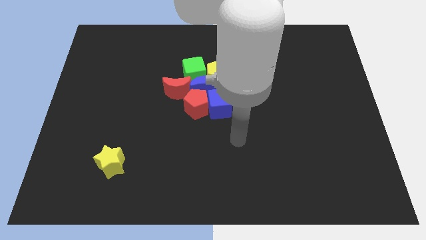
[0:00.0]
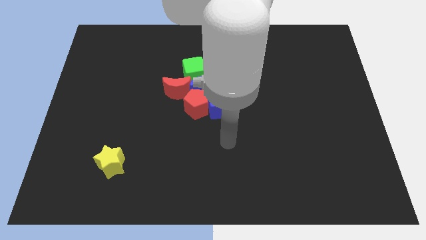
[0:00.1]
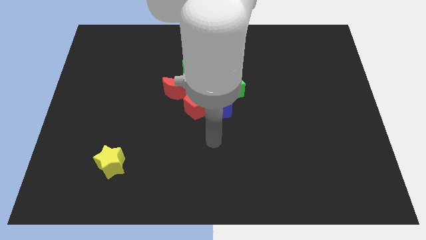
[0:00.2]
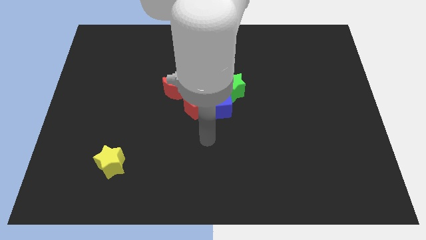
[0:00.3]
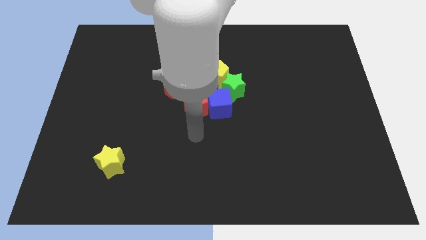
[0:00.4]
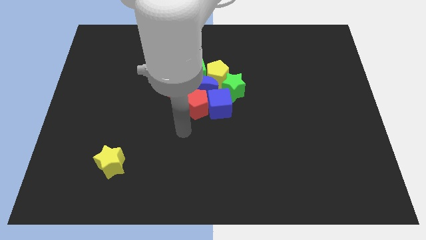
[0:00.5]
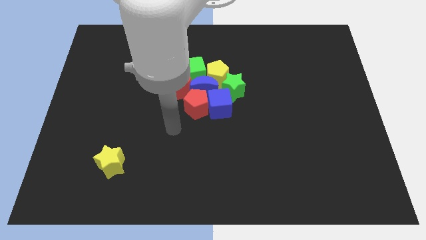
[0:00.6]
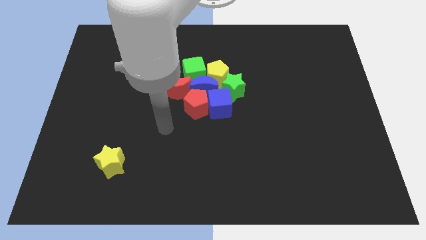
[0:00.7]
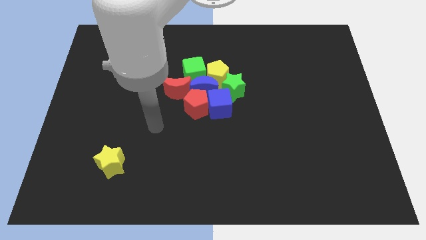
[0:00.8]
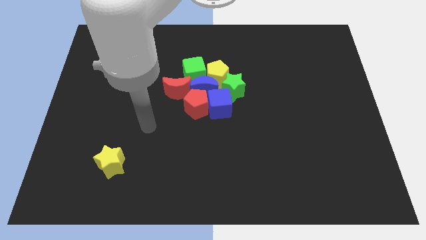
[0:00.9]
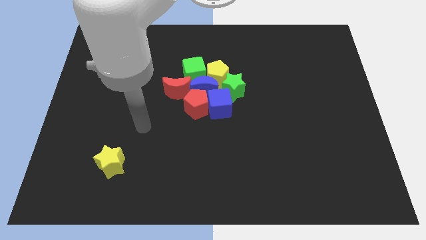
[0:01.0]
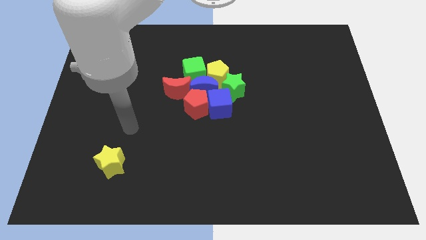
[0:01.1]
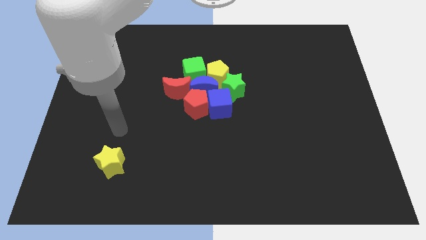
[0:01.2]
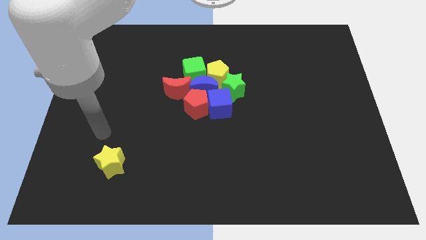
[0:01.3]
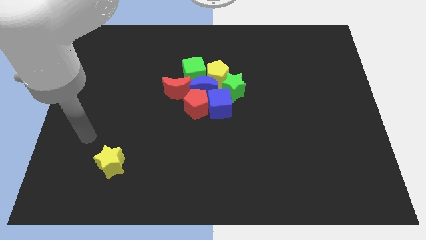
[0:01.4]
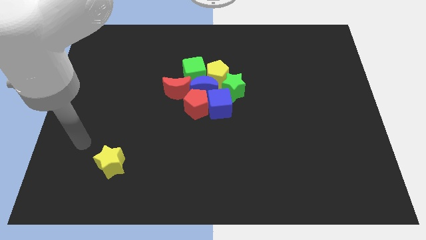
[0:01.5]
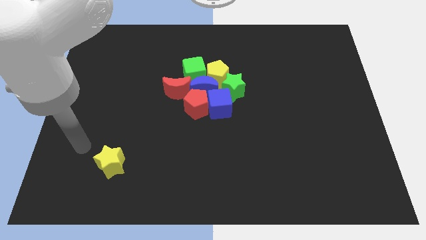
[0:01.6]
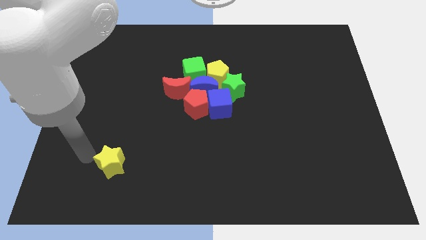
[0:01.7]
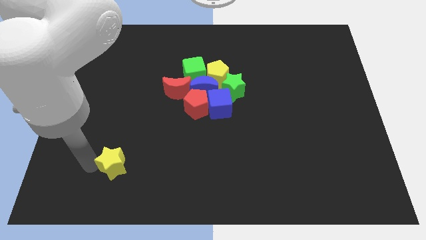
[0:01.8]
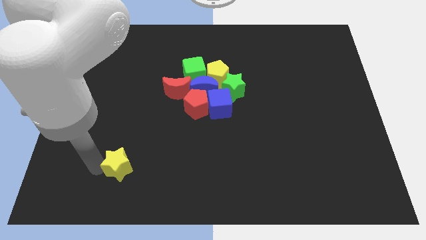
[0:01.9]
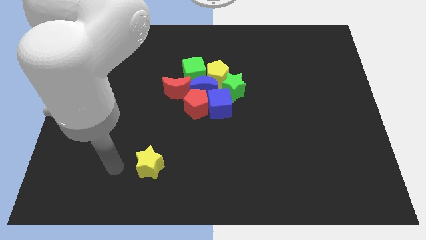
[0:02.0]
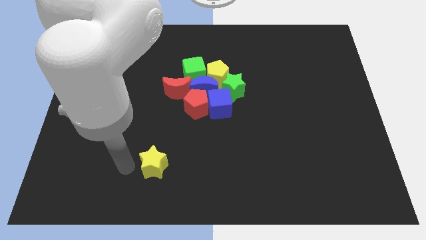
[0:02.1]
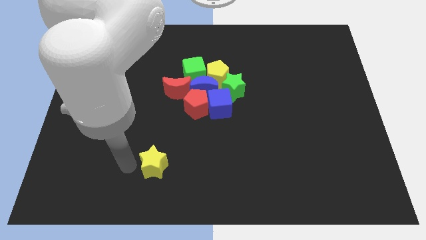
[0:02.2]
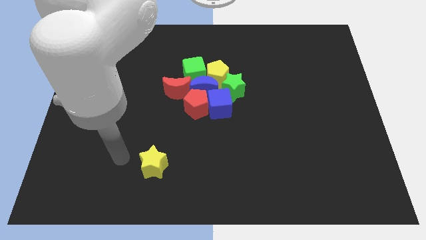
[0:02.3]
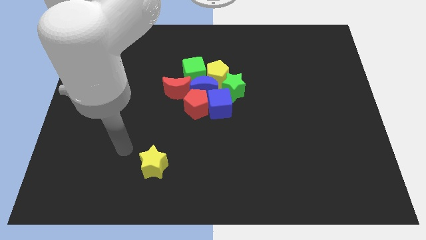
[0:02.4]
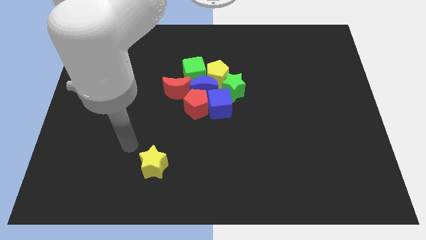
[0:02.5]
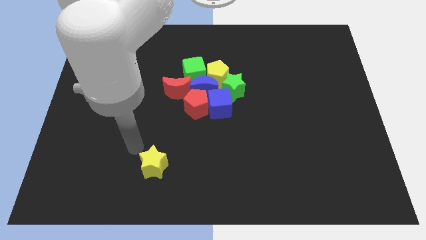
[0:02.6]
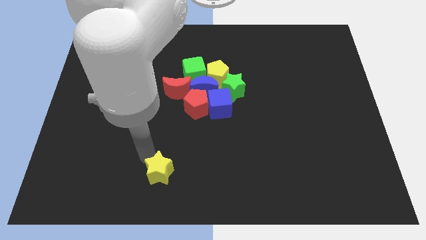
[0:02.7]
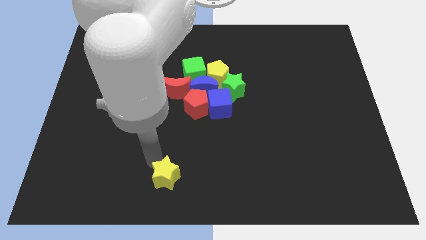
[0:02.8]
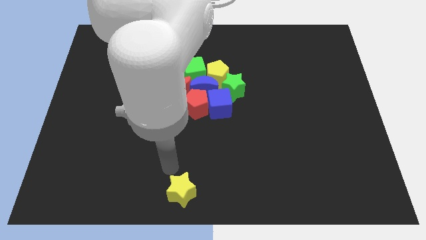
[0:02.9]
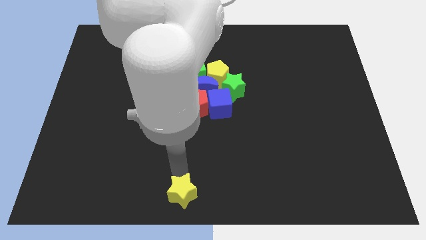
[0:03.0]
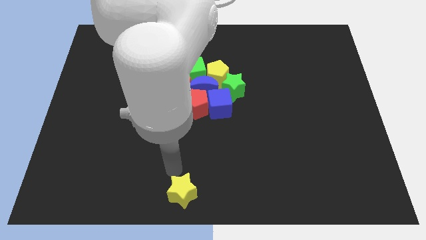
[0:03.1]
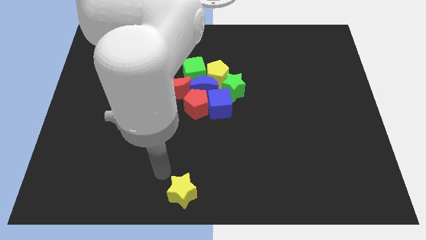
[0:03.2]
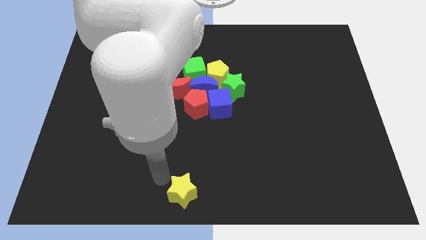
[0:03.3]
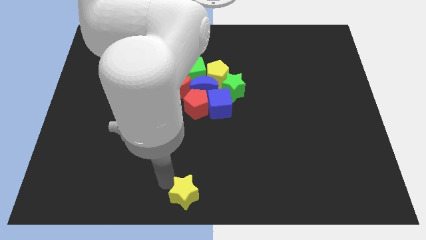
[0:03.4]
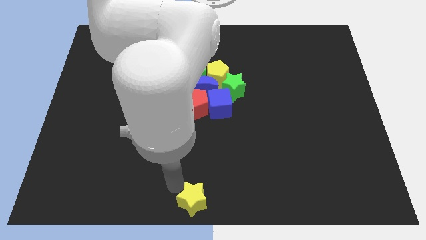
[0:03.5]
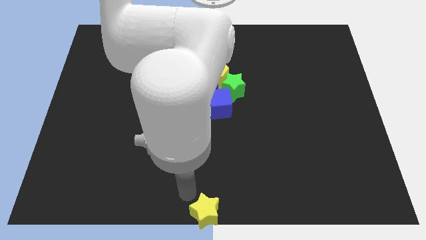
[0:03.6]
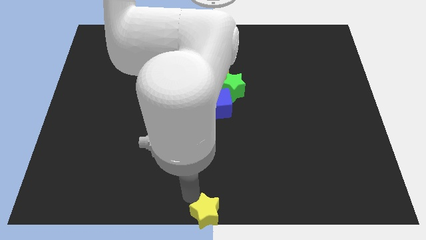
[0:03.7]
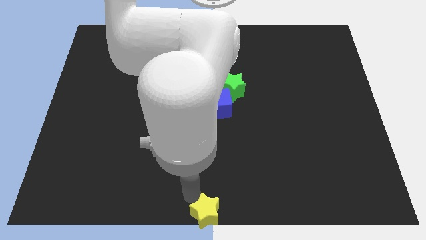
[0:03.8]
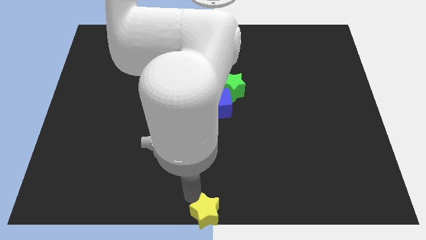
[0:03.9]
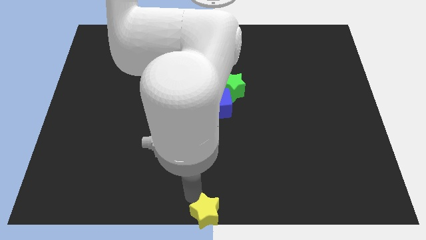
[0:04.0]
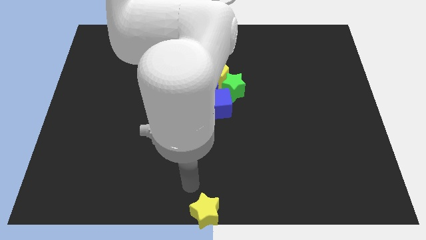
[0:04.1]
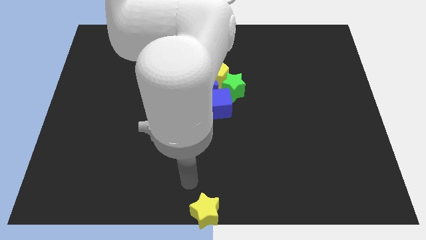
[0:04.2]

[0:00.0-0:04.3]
place the yellow star at the bottom center of the board

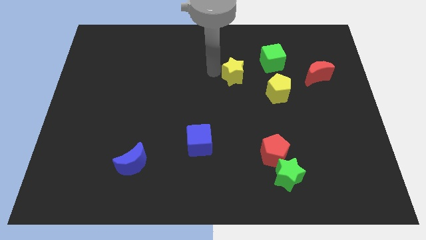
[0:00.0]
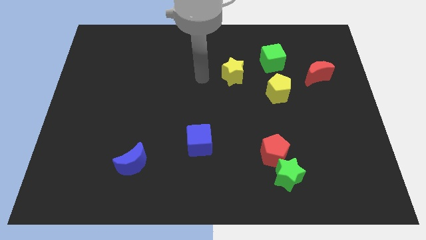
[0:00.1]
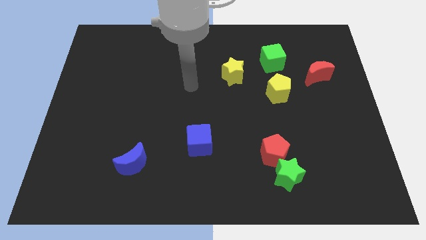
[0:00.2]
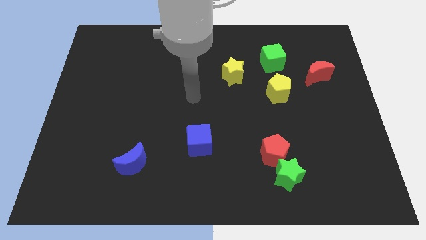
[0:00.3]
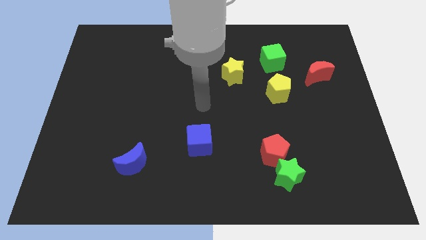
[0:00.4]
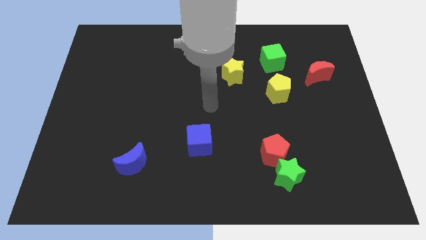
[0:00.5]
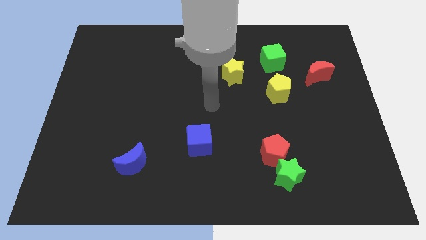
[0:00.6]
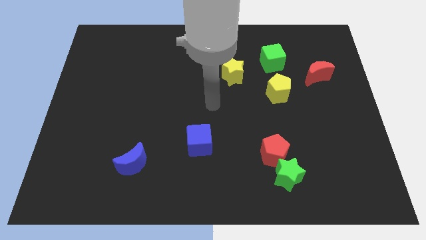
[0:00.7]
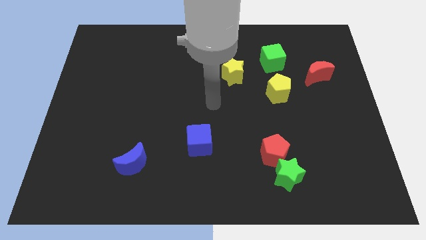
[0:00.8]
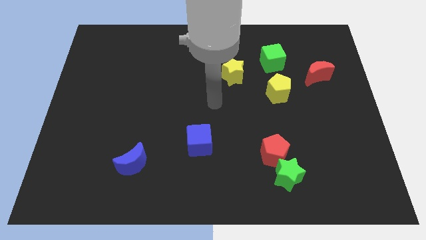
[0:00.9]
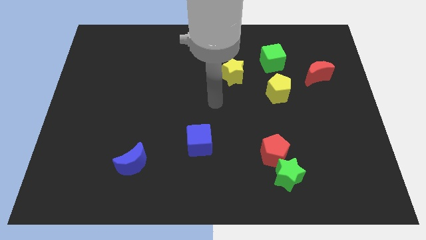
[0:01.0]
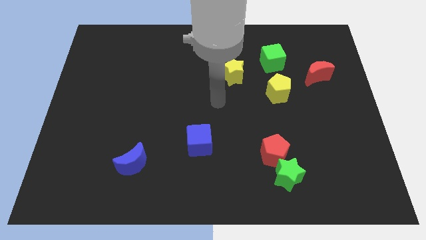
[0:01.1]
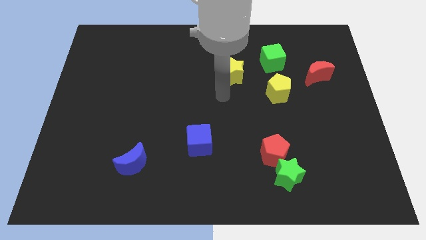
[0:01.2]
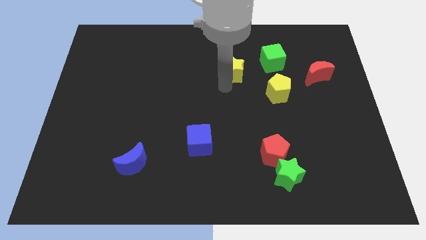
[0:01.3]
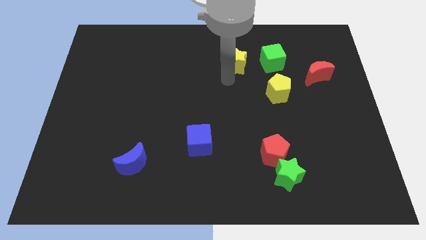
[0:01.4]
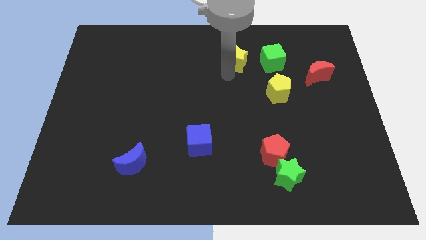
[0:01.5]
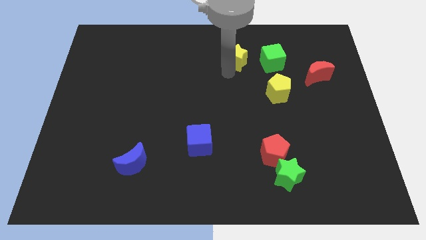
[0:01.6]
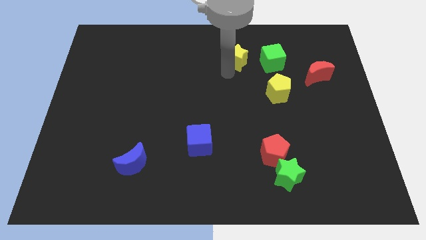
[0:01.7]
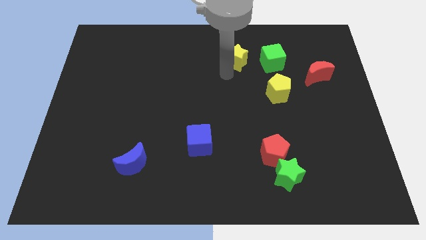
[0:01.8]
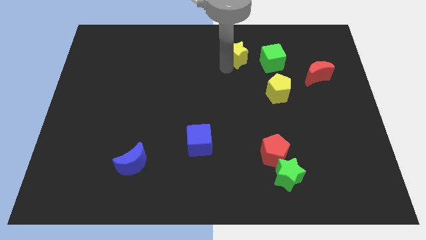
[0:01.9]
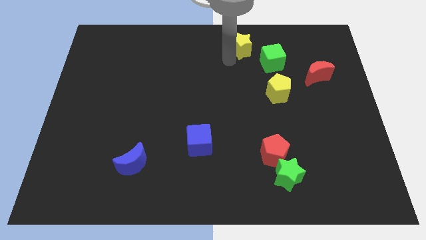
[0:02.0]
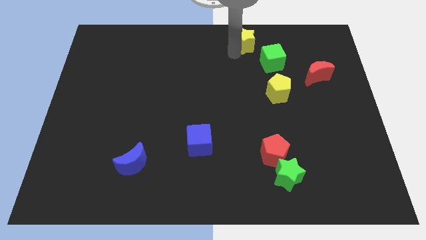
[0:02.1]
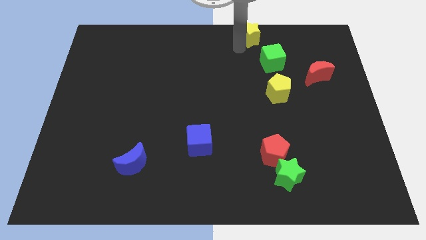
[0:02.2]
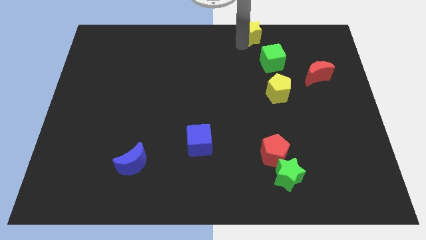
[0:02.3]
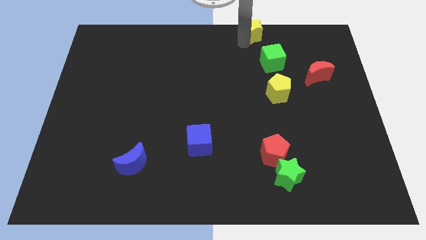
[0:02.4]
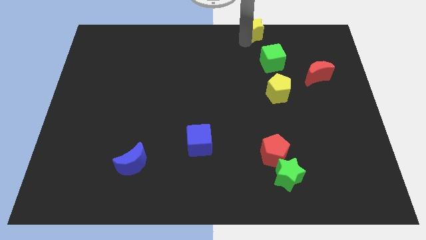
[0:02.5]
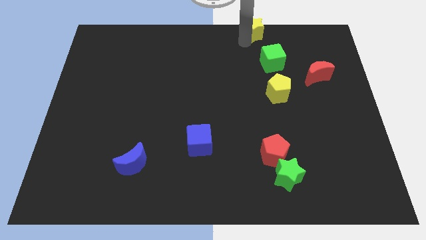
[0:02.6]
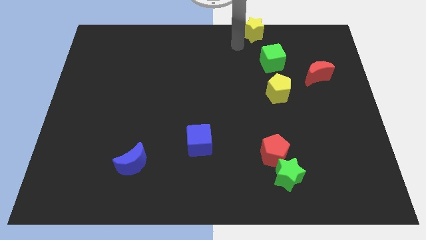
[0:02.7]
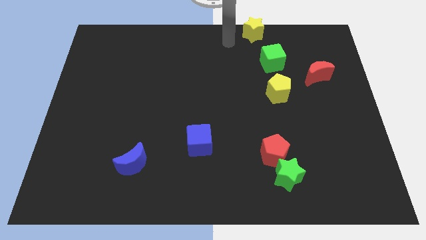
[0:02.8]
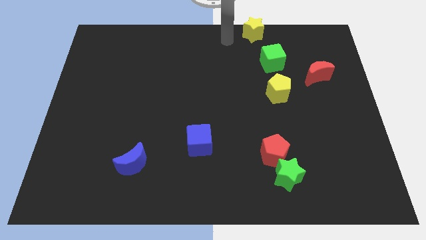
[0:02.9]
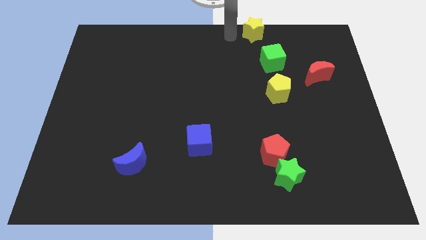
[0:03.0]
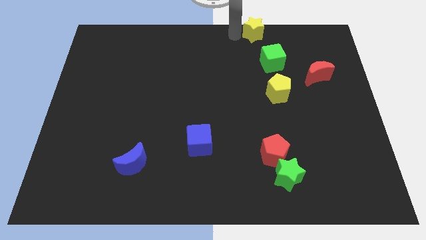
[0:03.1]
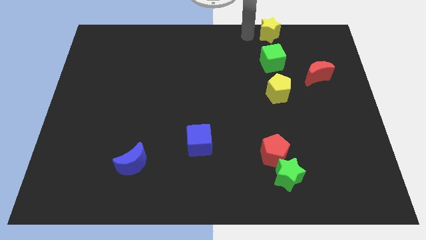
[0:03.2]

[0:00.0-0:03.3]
move the yellow star above the green cube

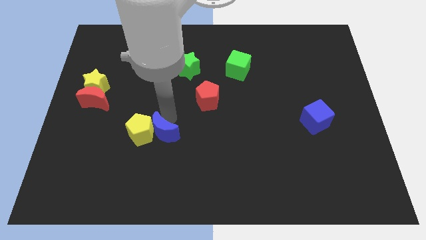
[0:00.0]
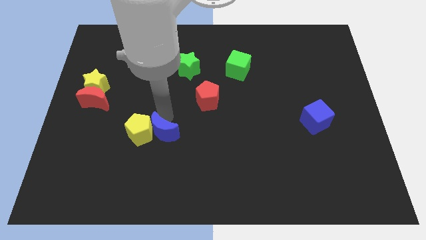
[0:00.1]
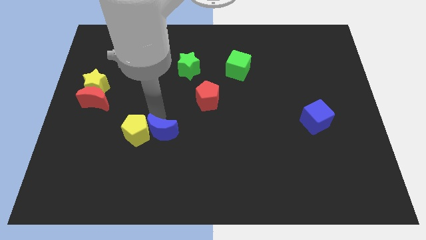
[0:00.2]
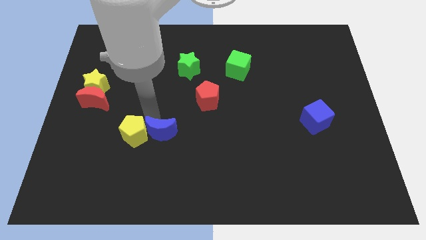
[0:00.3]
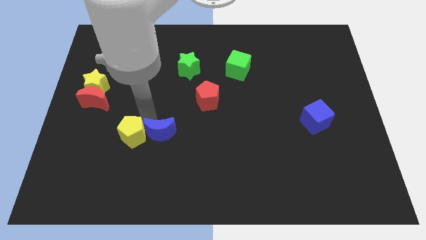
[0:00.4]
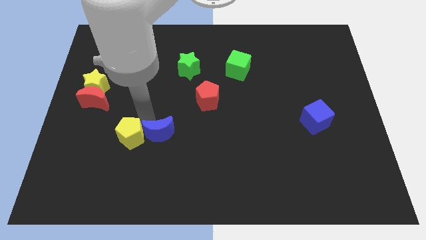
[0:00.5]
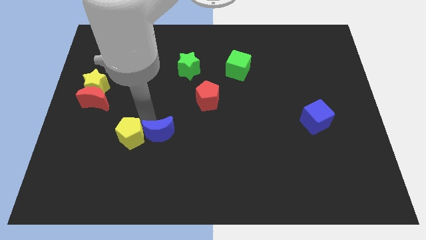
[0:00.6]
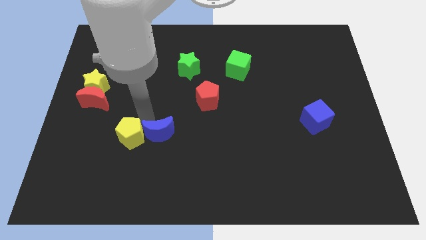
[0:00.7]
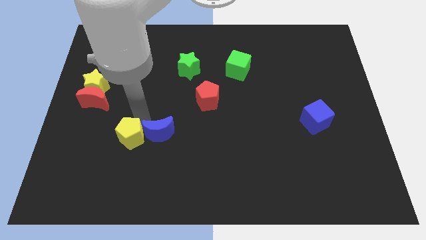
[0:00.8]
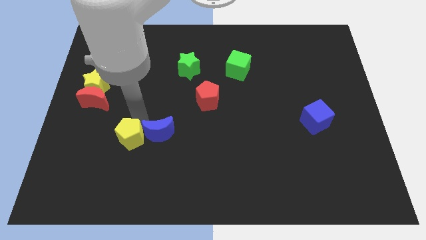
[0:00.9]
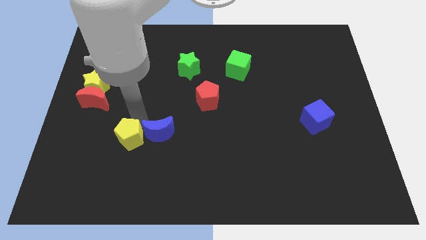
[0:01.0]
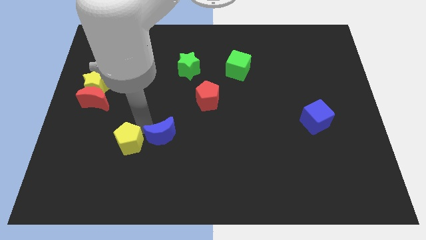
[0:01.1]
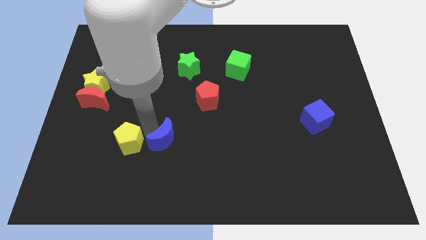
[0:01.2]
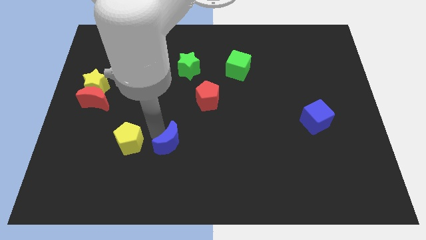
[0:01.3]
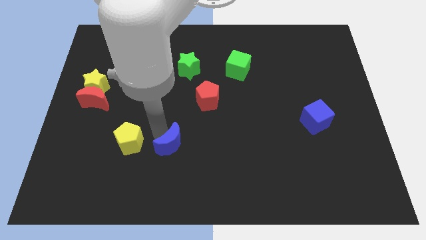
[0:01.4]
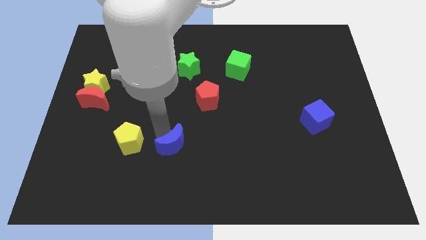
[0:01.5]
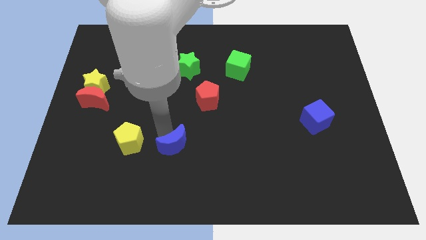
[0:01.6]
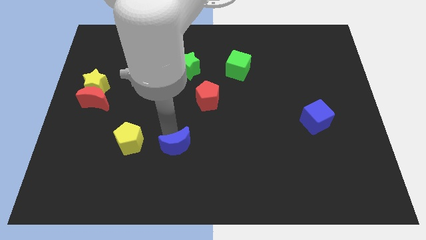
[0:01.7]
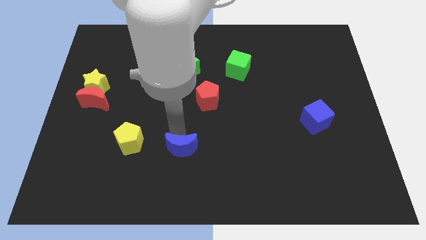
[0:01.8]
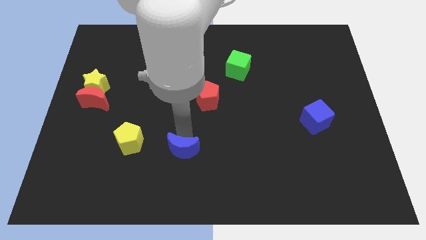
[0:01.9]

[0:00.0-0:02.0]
move the blue moon away from the yellow pentagon
